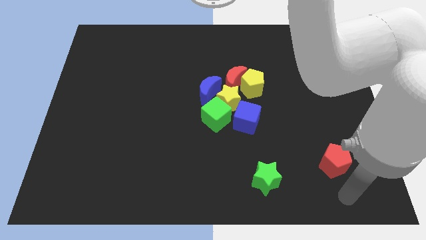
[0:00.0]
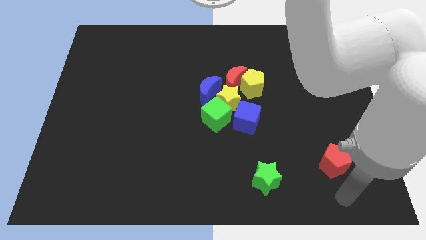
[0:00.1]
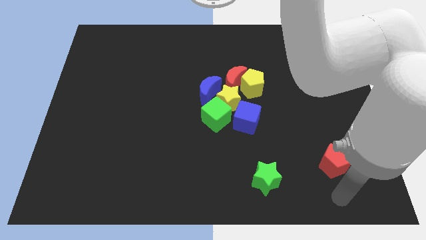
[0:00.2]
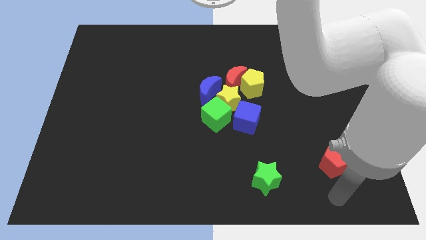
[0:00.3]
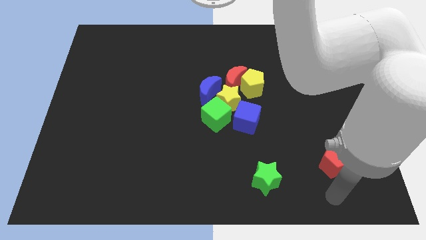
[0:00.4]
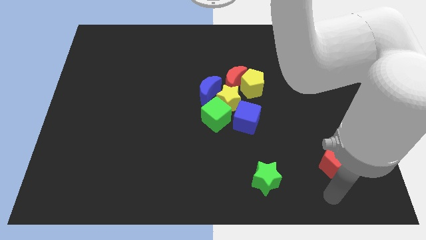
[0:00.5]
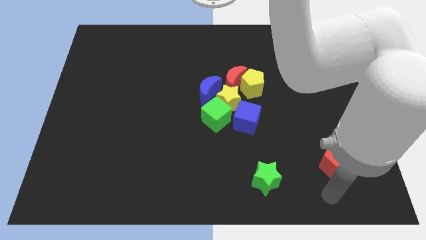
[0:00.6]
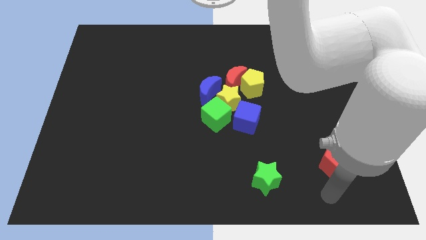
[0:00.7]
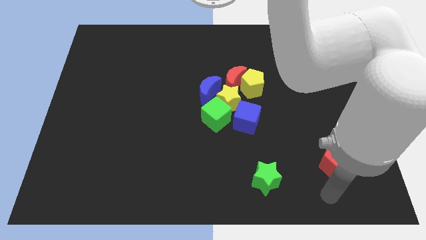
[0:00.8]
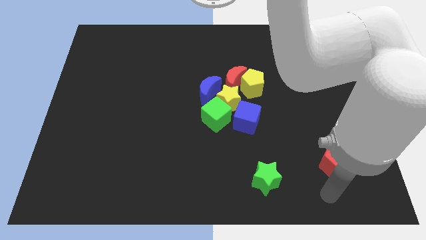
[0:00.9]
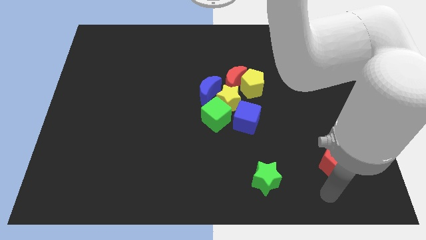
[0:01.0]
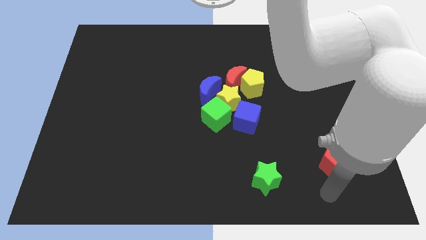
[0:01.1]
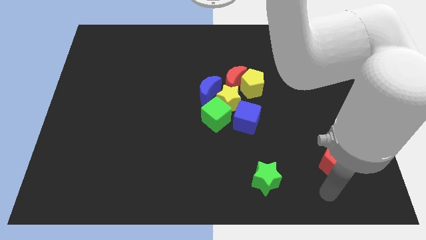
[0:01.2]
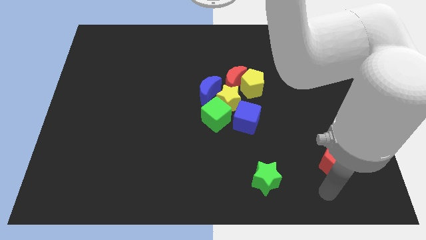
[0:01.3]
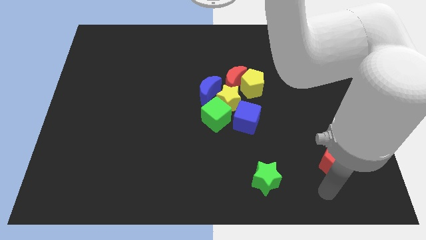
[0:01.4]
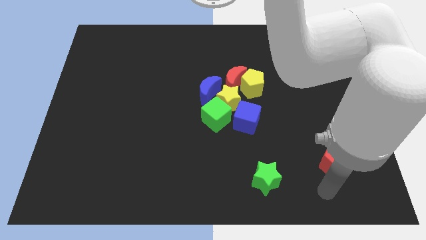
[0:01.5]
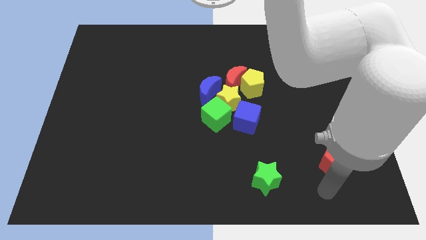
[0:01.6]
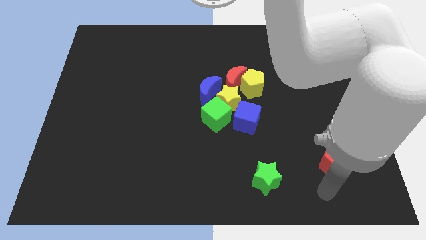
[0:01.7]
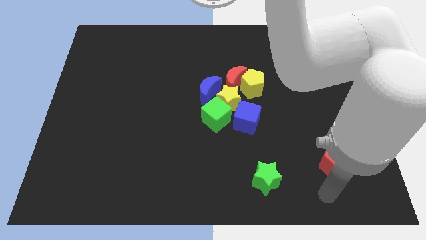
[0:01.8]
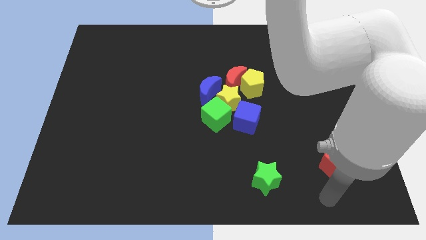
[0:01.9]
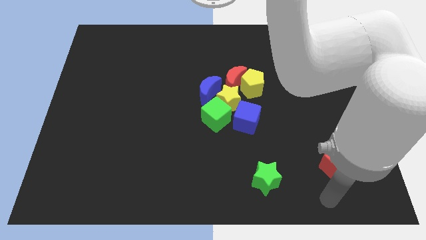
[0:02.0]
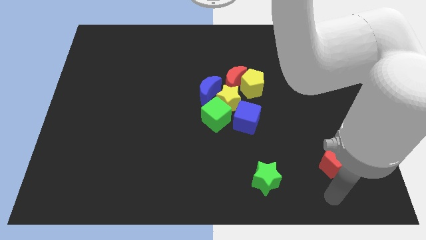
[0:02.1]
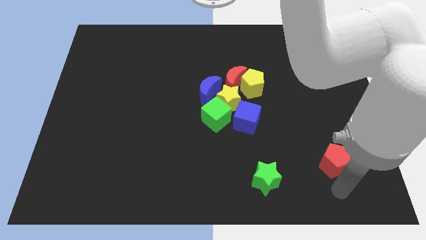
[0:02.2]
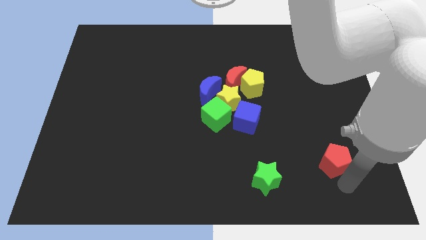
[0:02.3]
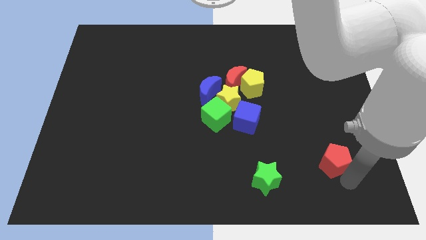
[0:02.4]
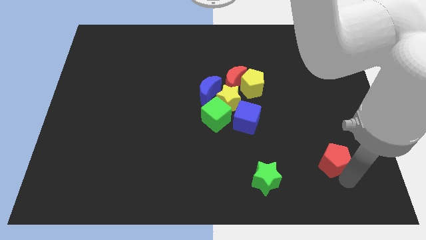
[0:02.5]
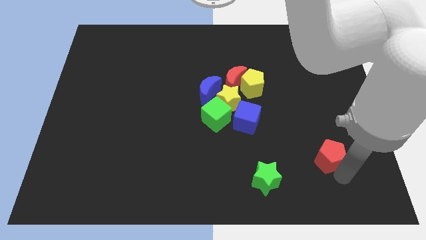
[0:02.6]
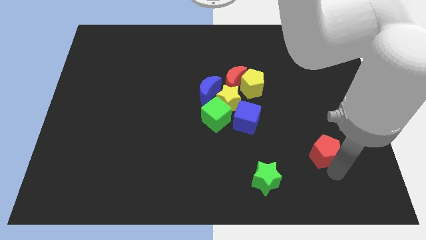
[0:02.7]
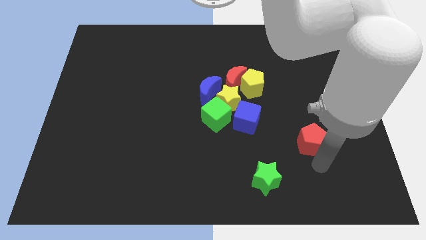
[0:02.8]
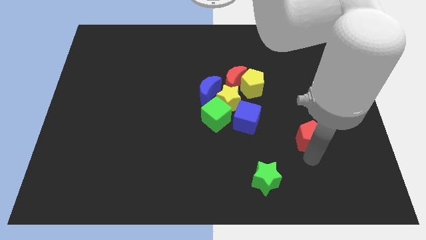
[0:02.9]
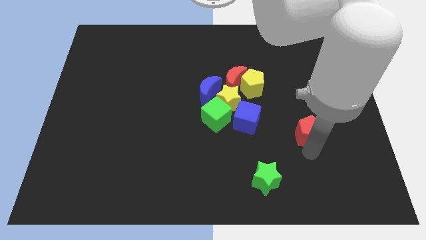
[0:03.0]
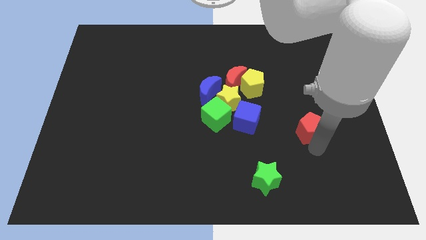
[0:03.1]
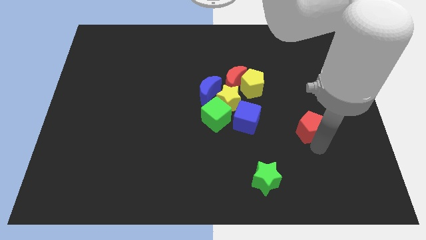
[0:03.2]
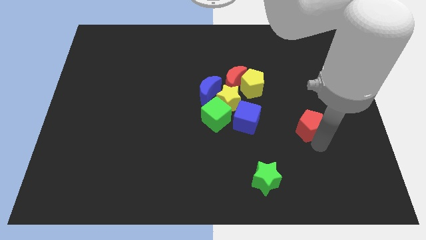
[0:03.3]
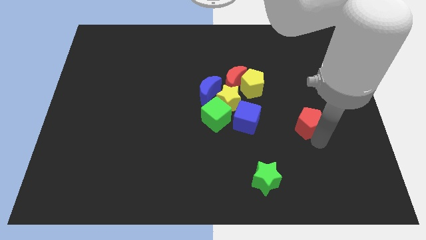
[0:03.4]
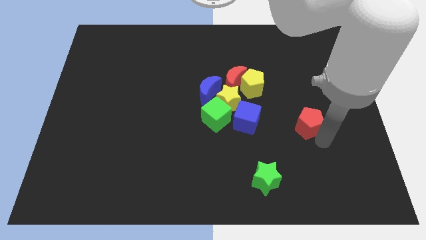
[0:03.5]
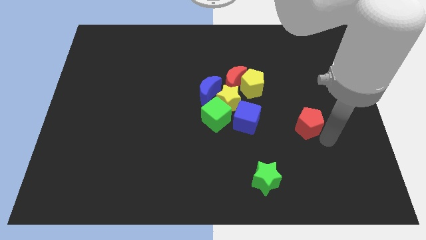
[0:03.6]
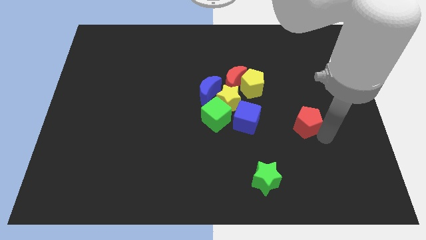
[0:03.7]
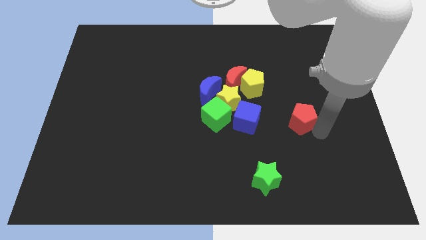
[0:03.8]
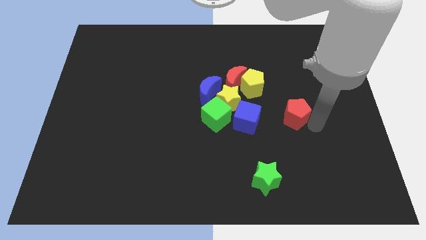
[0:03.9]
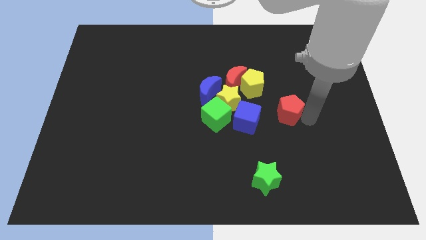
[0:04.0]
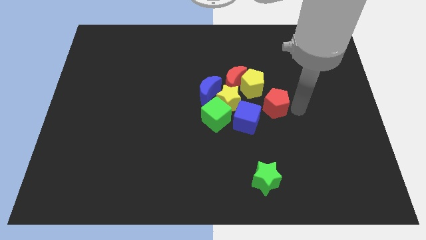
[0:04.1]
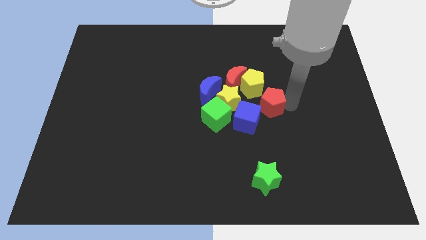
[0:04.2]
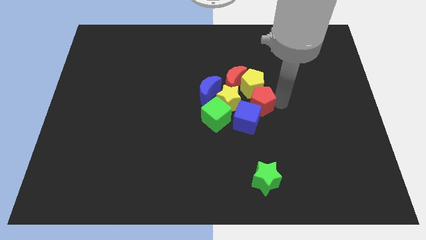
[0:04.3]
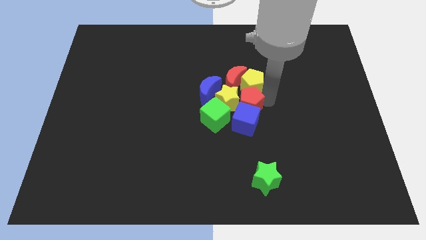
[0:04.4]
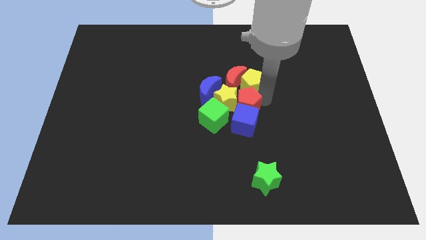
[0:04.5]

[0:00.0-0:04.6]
place the red pentagon in between blue cube and yellow pentagon

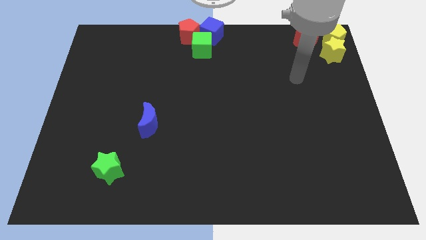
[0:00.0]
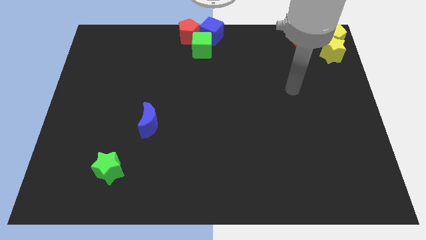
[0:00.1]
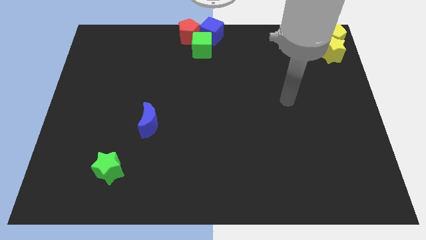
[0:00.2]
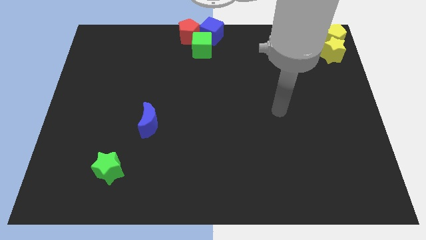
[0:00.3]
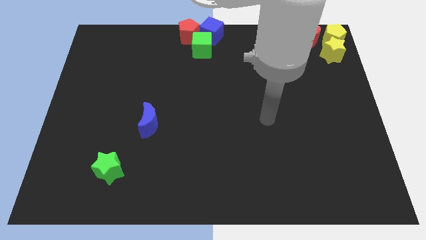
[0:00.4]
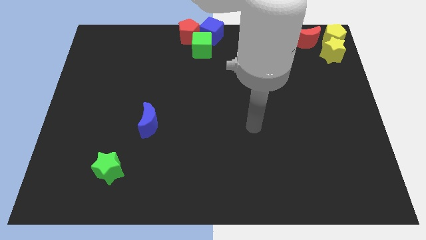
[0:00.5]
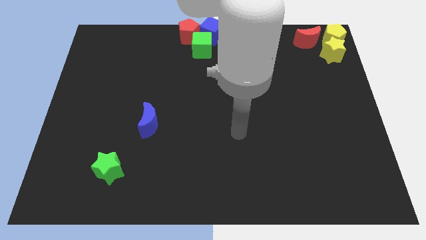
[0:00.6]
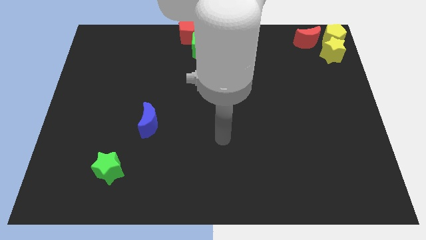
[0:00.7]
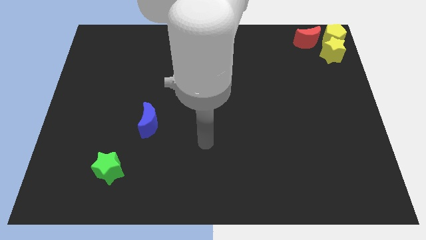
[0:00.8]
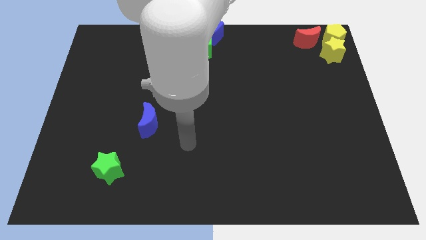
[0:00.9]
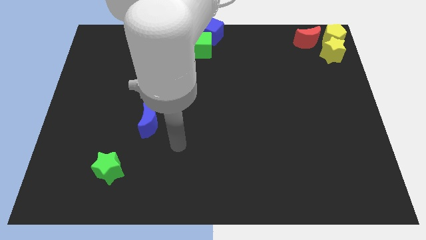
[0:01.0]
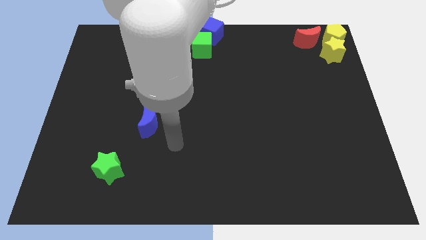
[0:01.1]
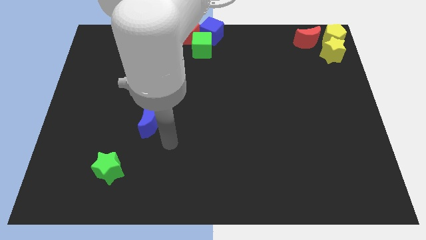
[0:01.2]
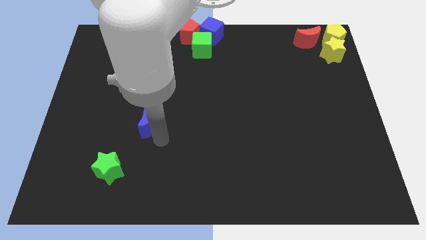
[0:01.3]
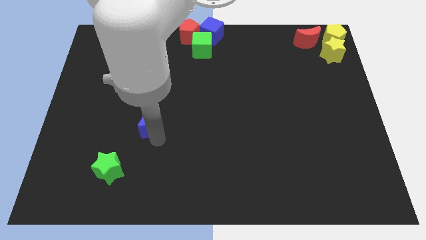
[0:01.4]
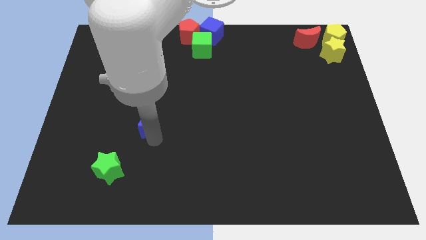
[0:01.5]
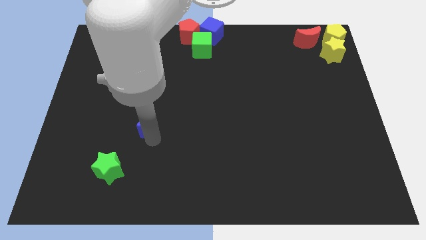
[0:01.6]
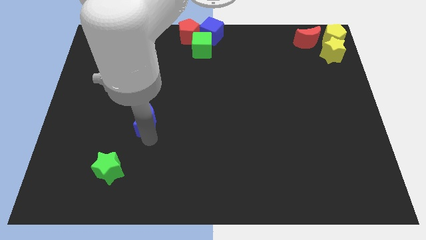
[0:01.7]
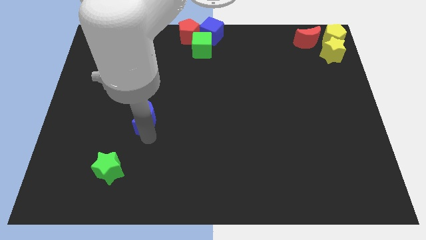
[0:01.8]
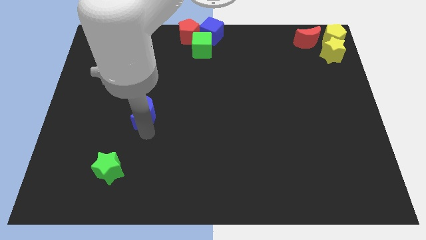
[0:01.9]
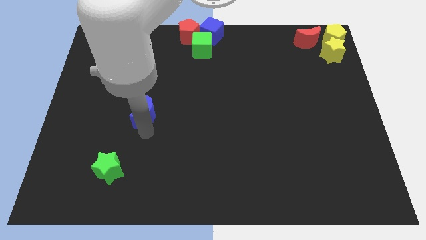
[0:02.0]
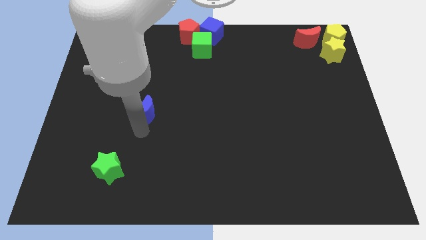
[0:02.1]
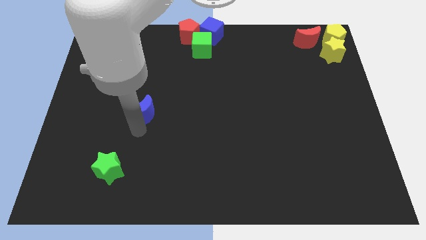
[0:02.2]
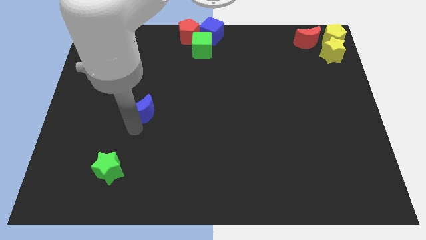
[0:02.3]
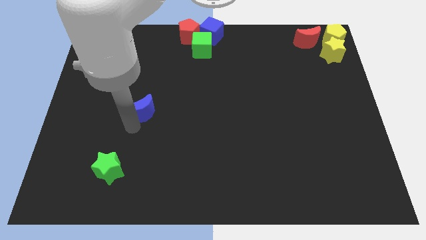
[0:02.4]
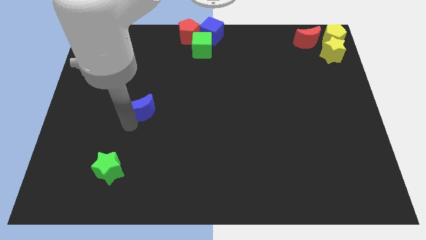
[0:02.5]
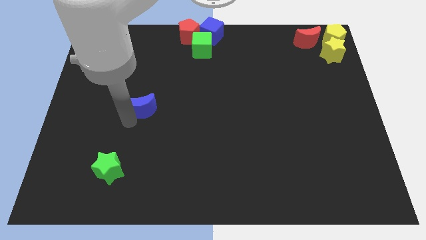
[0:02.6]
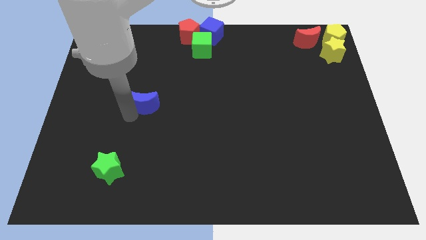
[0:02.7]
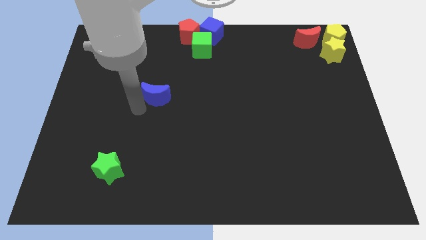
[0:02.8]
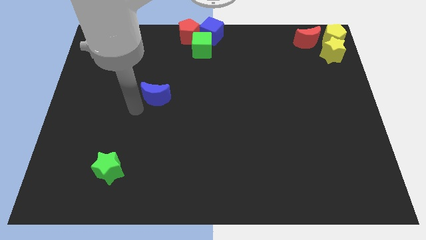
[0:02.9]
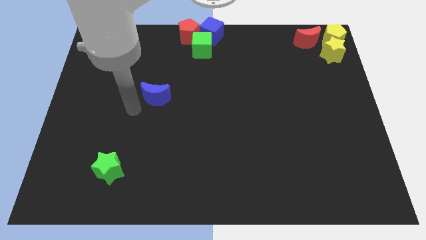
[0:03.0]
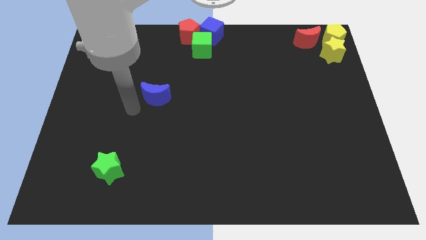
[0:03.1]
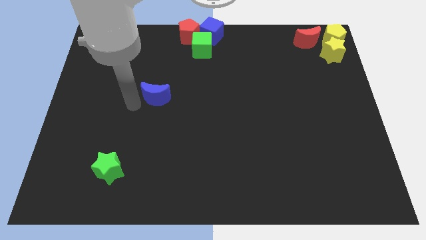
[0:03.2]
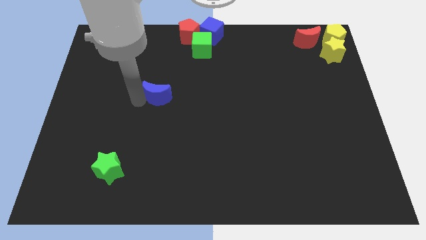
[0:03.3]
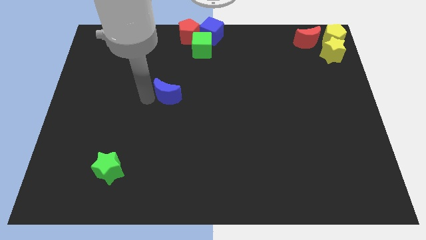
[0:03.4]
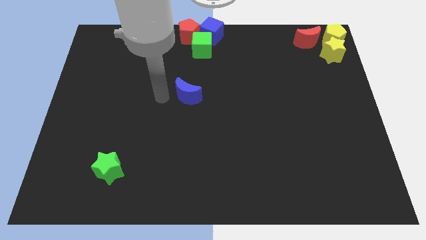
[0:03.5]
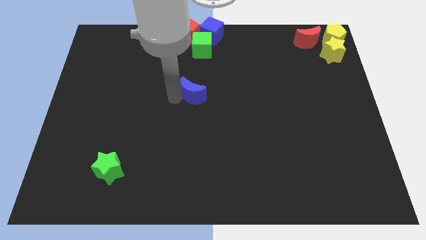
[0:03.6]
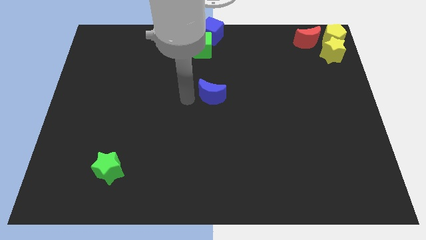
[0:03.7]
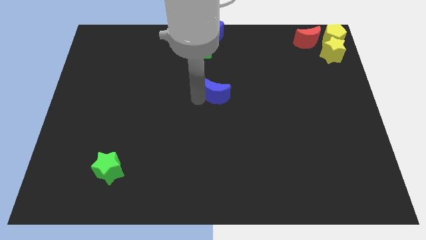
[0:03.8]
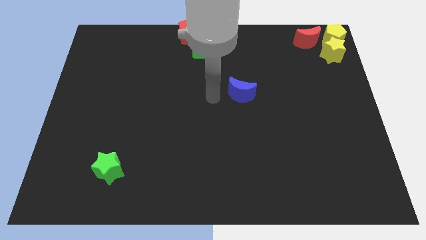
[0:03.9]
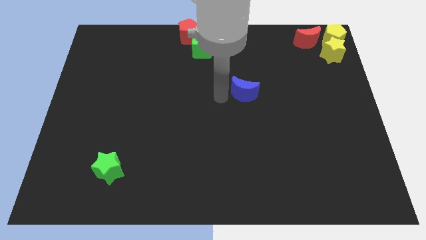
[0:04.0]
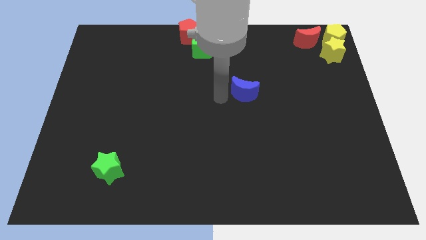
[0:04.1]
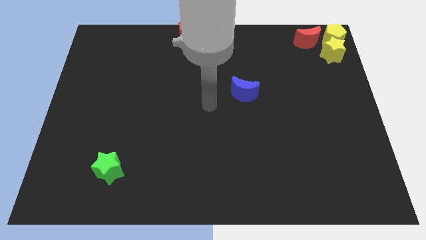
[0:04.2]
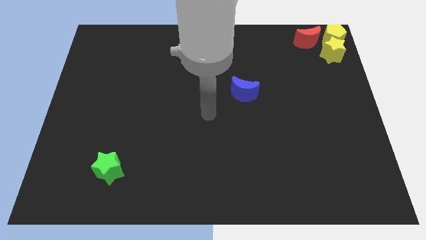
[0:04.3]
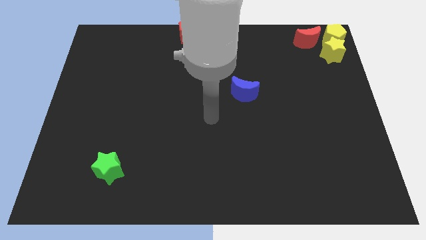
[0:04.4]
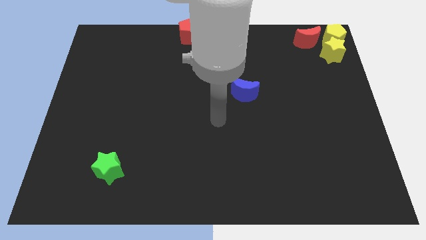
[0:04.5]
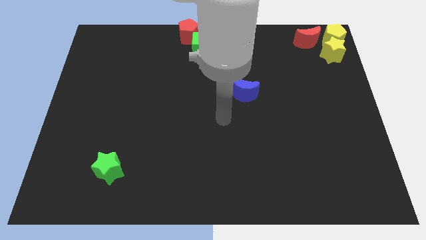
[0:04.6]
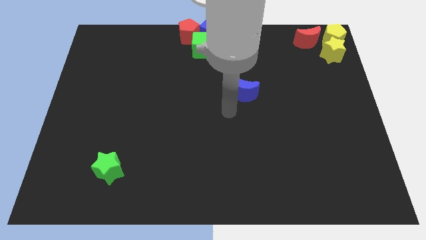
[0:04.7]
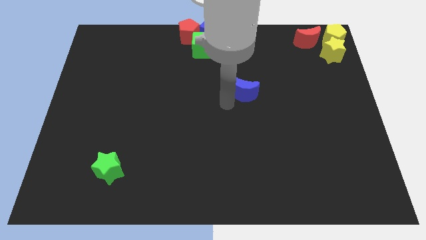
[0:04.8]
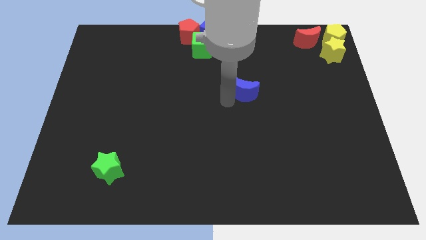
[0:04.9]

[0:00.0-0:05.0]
place the blue moon diagonally between the red moon and green star
